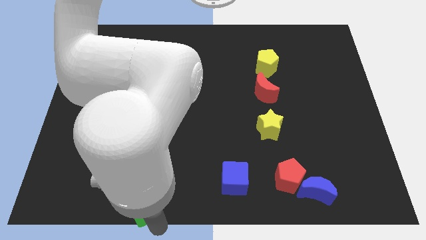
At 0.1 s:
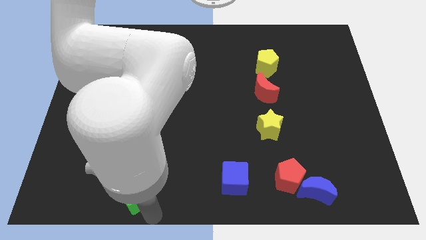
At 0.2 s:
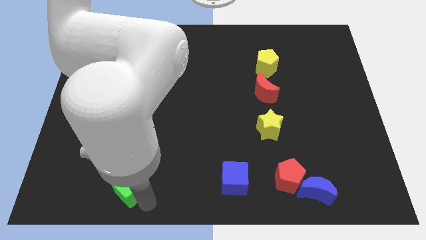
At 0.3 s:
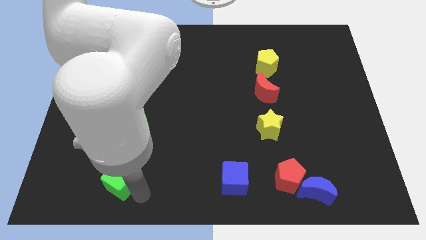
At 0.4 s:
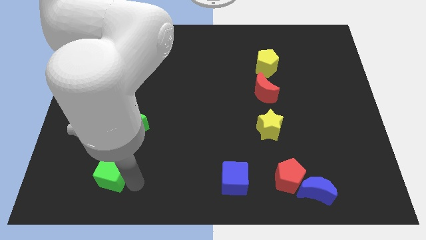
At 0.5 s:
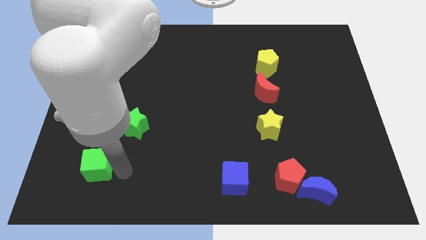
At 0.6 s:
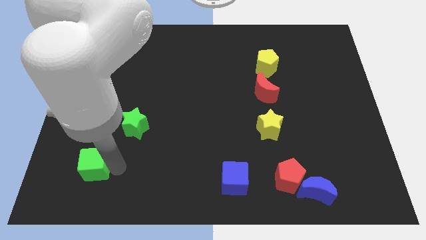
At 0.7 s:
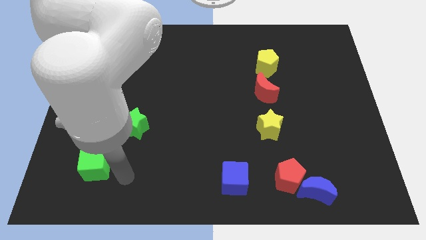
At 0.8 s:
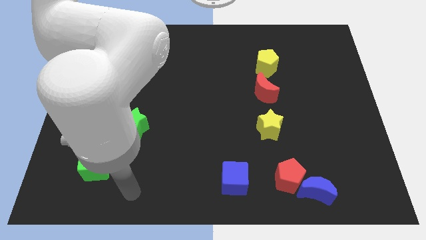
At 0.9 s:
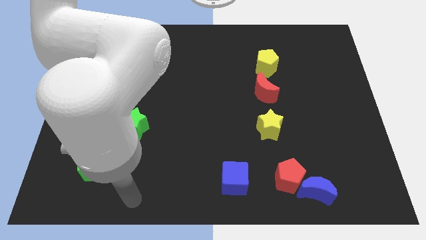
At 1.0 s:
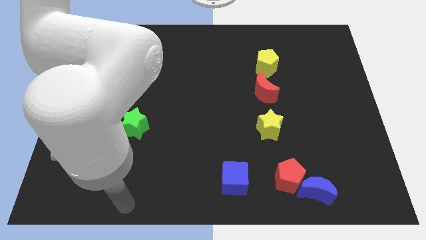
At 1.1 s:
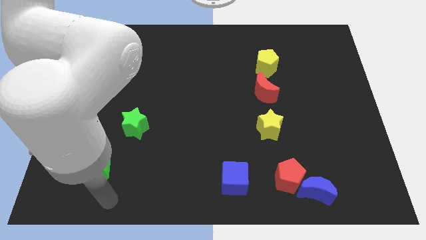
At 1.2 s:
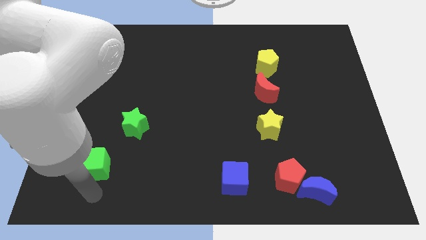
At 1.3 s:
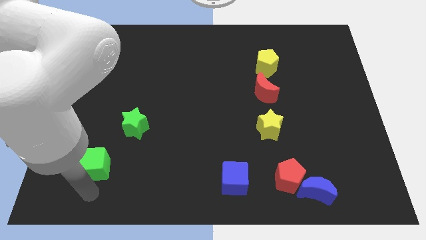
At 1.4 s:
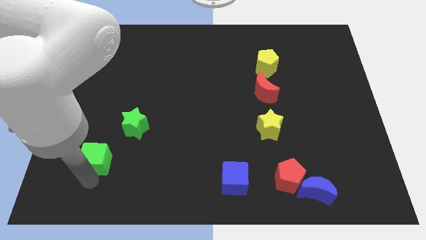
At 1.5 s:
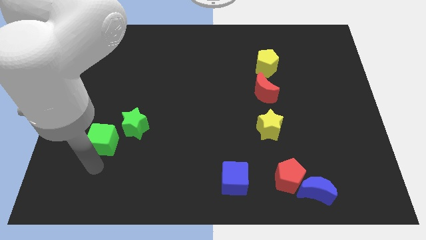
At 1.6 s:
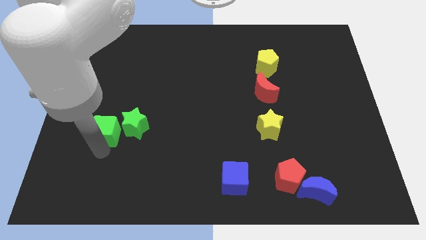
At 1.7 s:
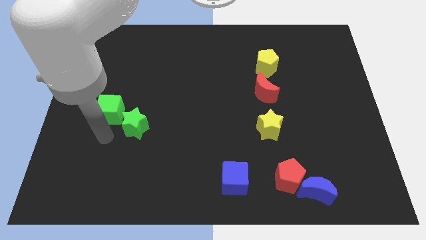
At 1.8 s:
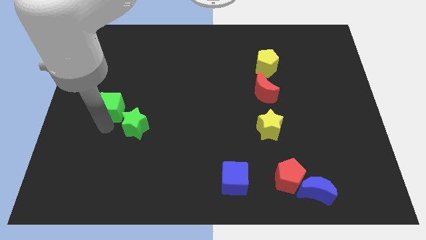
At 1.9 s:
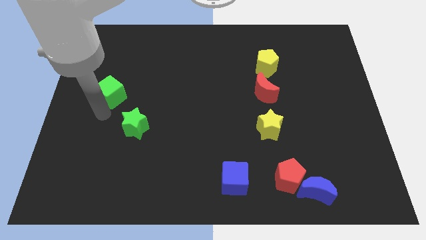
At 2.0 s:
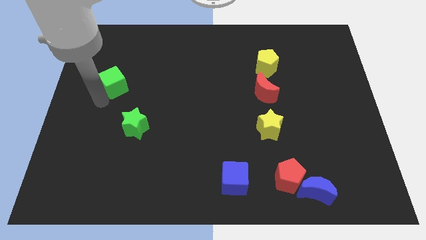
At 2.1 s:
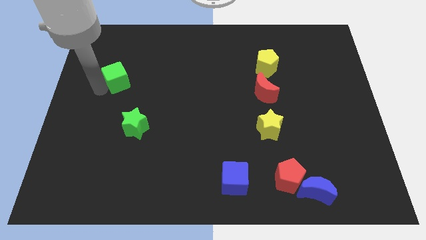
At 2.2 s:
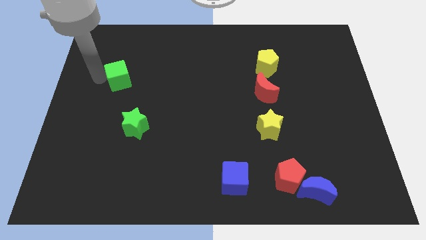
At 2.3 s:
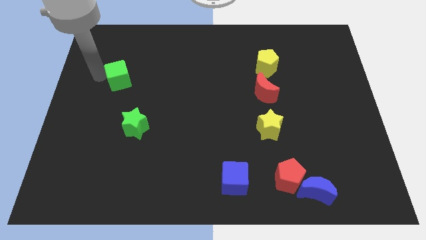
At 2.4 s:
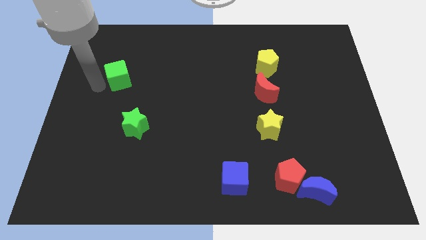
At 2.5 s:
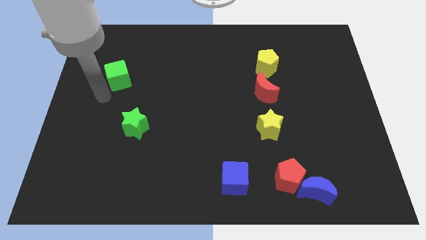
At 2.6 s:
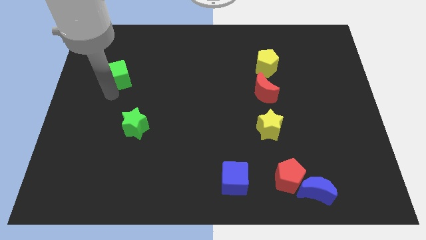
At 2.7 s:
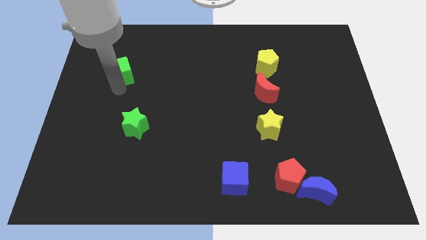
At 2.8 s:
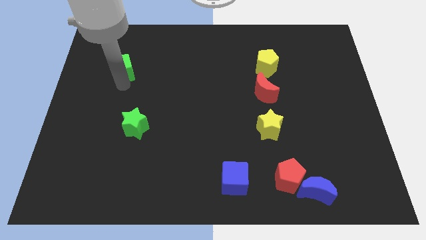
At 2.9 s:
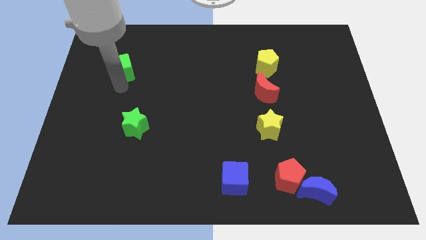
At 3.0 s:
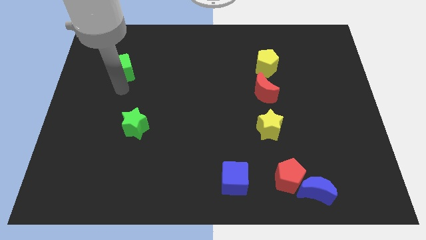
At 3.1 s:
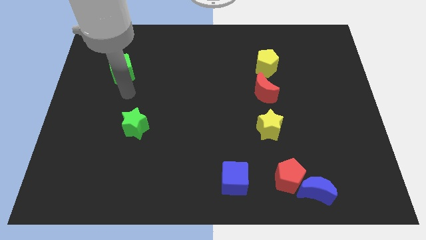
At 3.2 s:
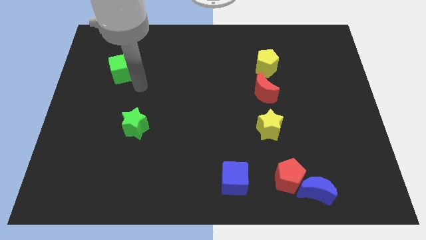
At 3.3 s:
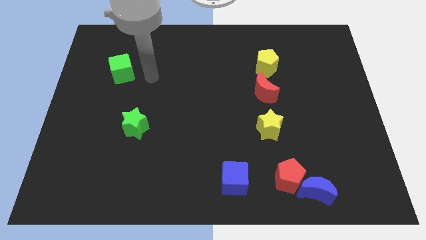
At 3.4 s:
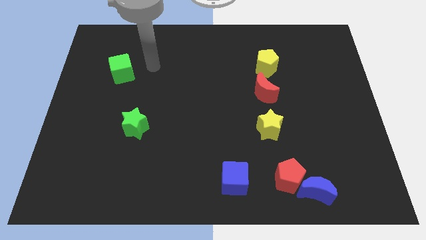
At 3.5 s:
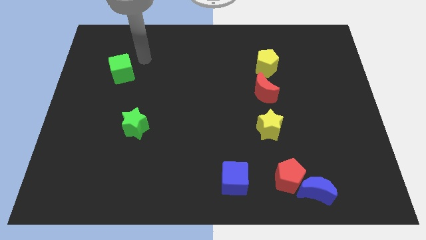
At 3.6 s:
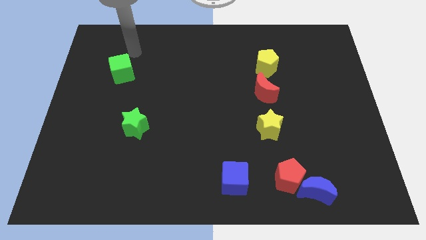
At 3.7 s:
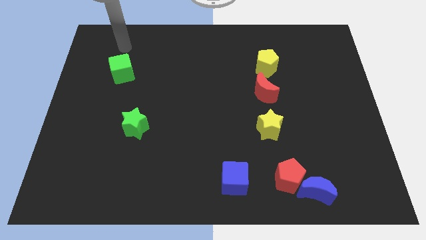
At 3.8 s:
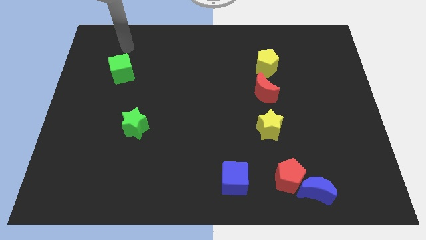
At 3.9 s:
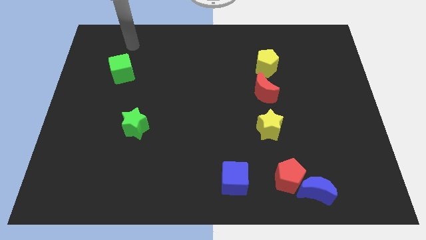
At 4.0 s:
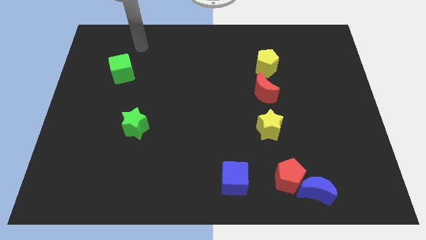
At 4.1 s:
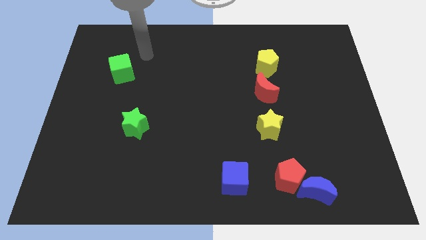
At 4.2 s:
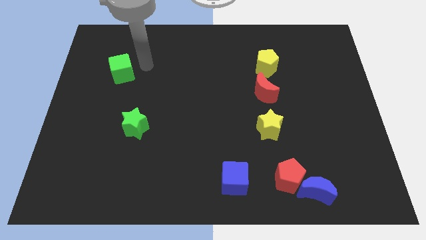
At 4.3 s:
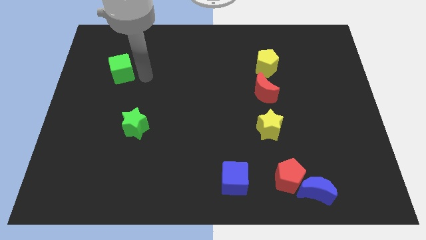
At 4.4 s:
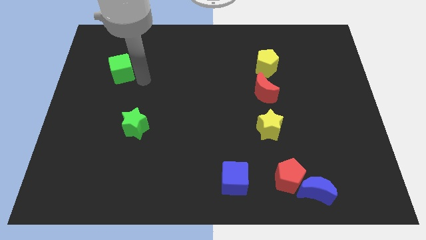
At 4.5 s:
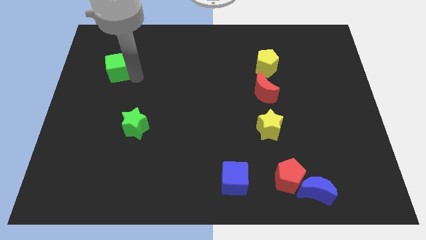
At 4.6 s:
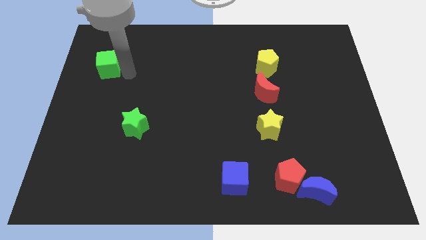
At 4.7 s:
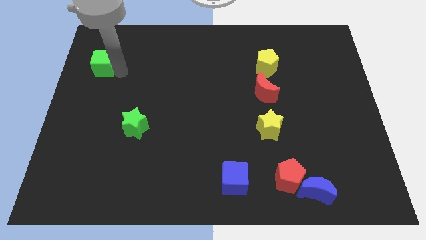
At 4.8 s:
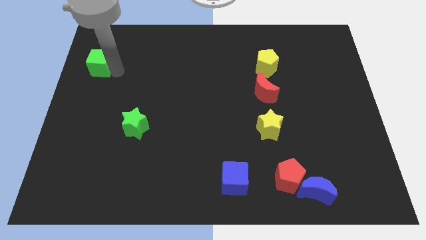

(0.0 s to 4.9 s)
place the green cube left to the yellow pentagon

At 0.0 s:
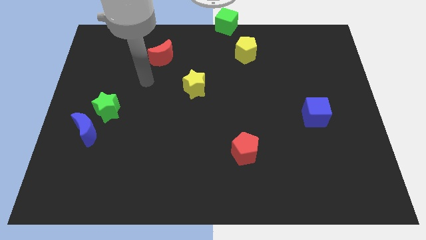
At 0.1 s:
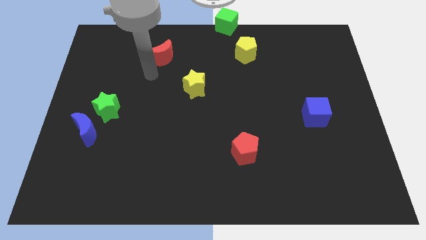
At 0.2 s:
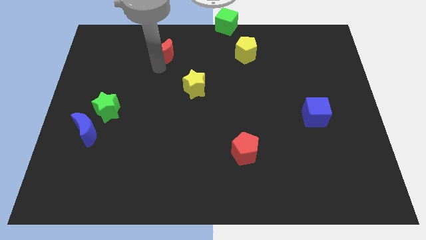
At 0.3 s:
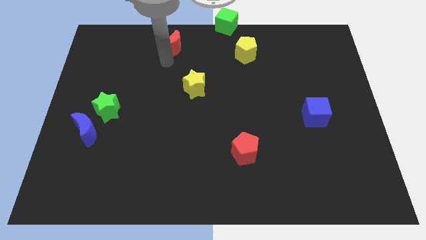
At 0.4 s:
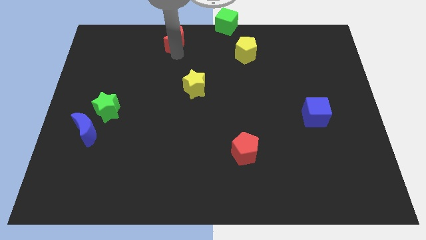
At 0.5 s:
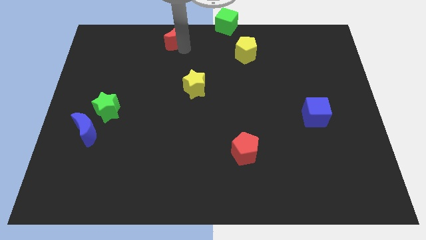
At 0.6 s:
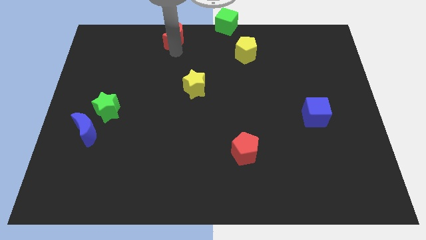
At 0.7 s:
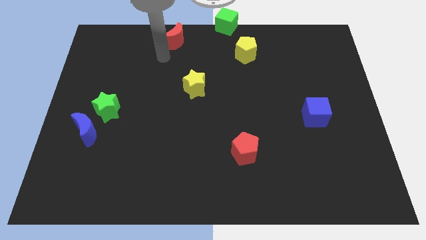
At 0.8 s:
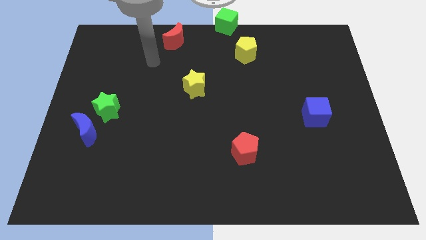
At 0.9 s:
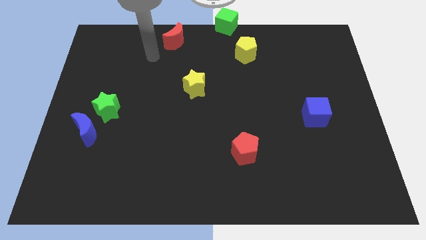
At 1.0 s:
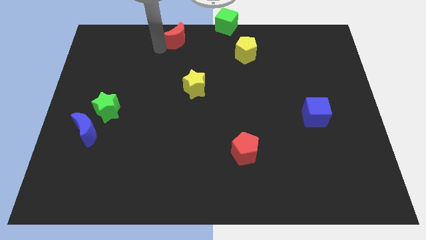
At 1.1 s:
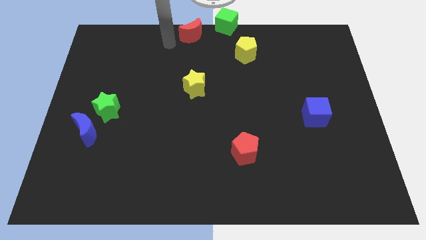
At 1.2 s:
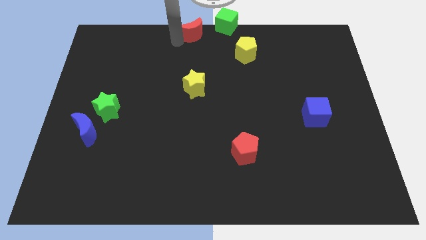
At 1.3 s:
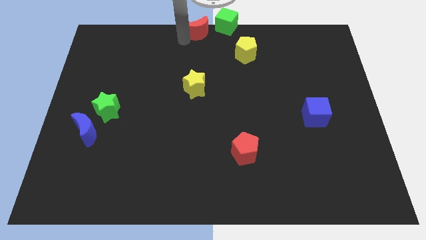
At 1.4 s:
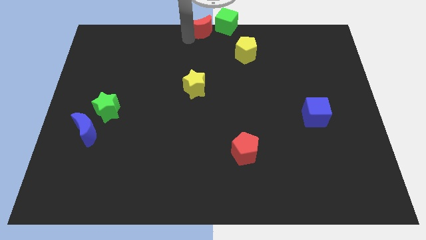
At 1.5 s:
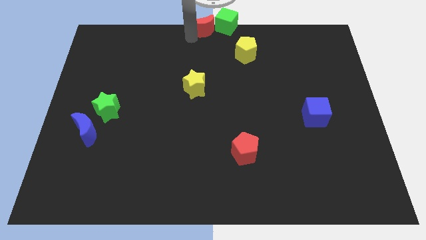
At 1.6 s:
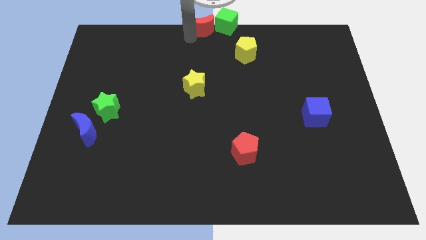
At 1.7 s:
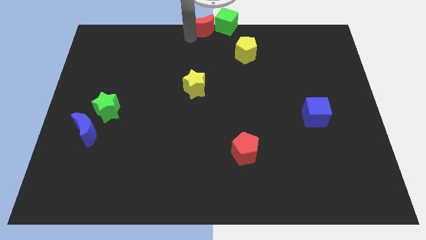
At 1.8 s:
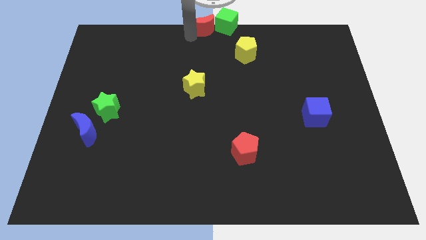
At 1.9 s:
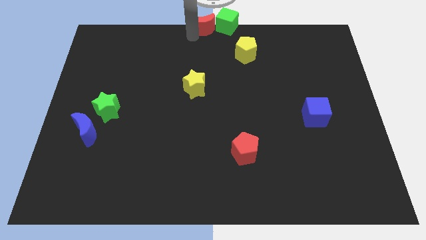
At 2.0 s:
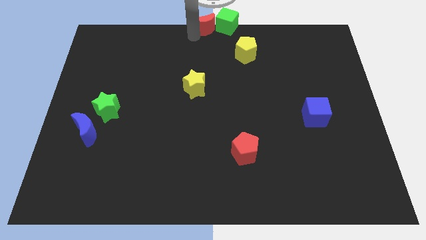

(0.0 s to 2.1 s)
push the red crescent towards the left side of the green cube

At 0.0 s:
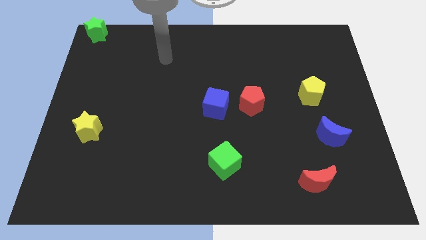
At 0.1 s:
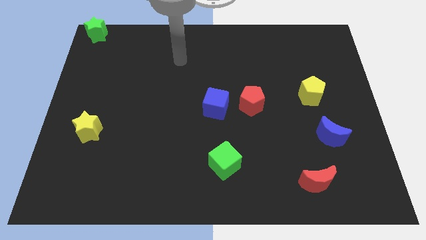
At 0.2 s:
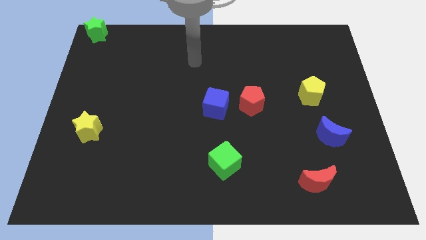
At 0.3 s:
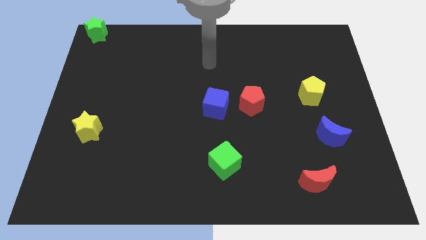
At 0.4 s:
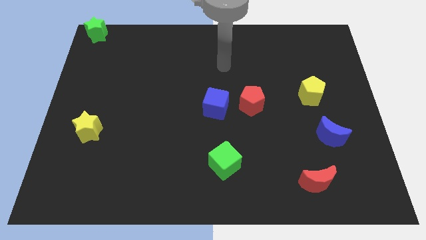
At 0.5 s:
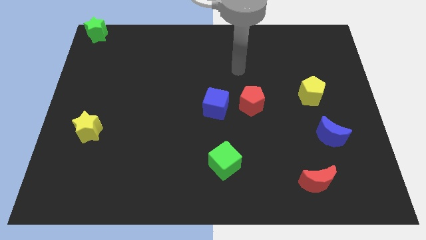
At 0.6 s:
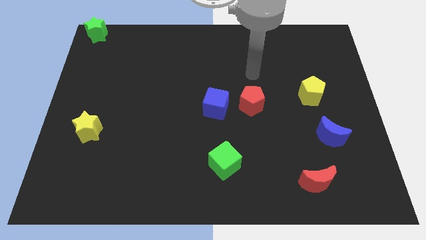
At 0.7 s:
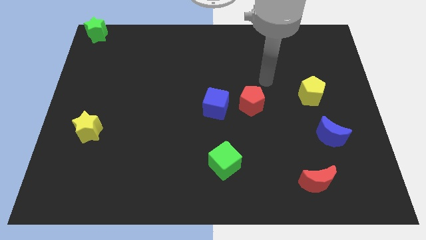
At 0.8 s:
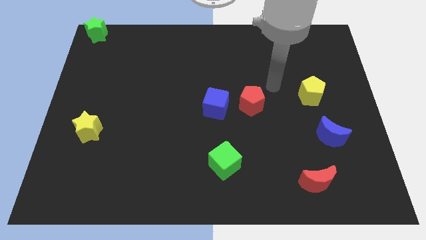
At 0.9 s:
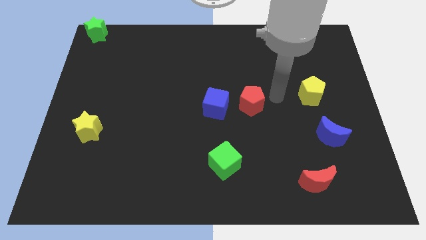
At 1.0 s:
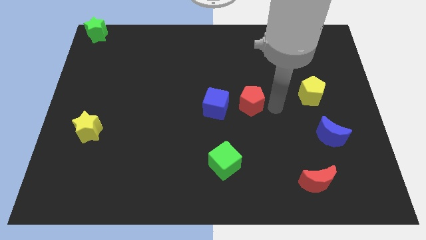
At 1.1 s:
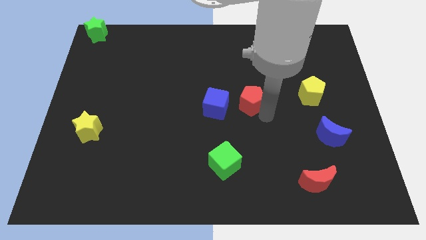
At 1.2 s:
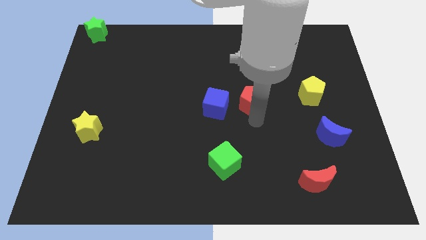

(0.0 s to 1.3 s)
put arm below red pentagon

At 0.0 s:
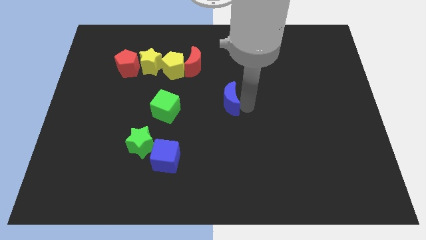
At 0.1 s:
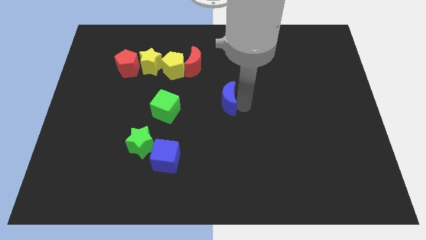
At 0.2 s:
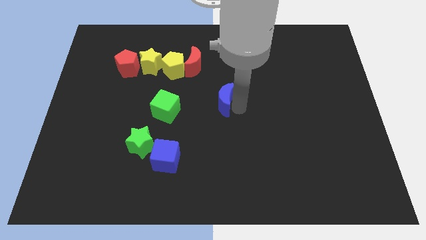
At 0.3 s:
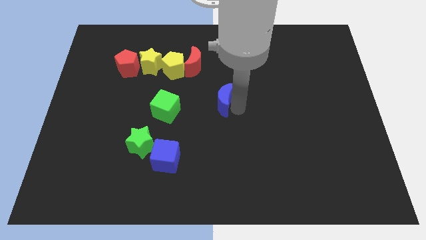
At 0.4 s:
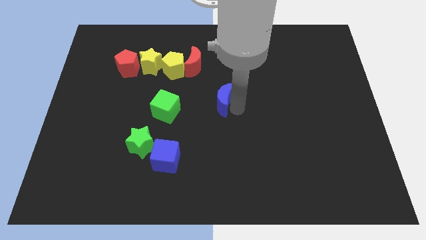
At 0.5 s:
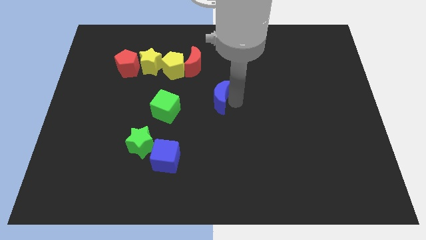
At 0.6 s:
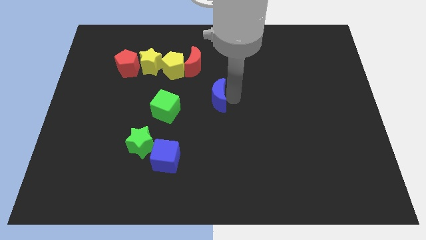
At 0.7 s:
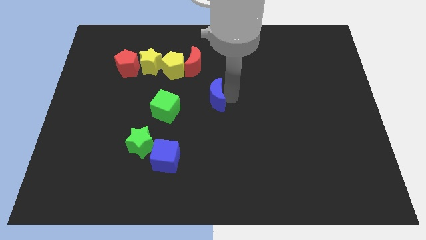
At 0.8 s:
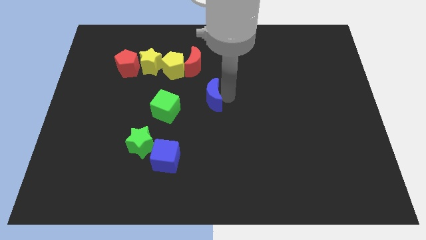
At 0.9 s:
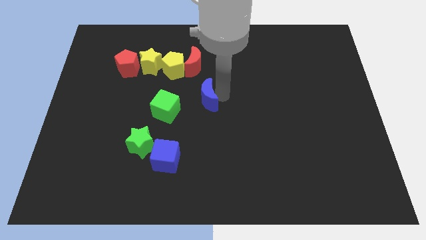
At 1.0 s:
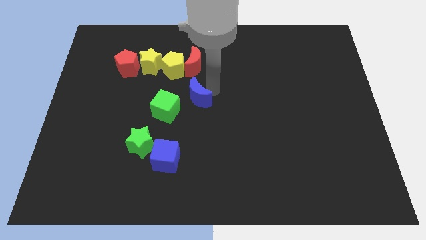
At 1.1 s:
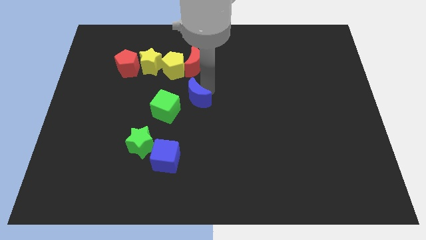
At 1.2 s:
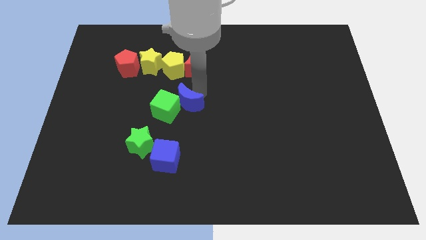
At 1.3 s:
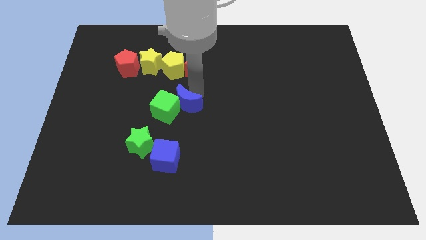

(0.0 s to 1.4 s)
move the blue crescent to the top right of the green cube
